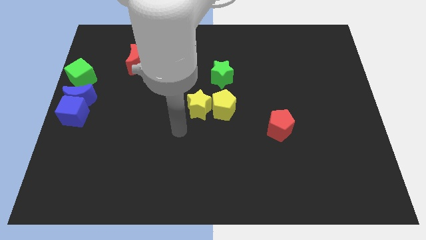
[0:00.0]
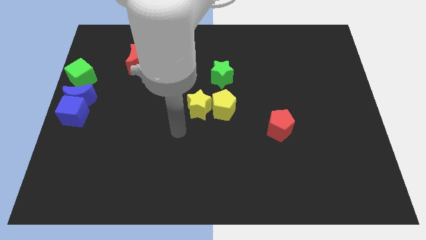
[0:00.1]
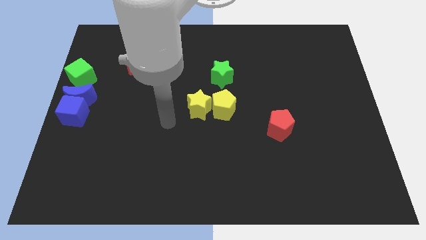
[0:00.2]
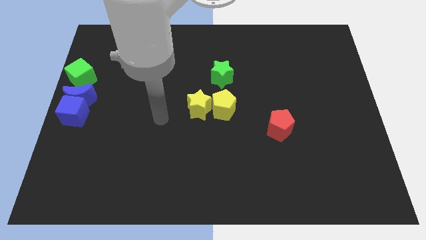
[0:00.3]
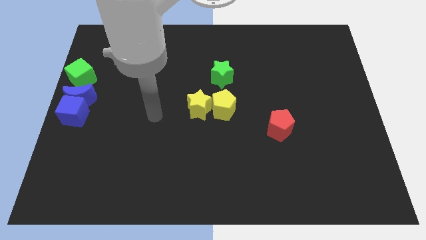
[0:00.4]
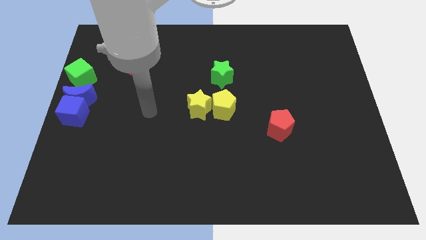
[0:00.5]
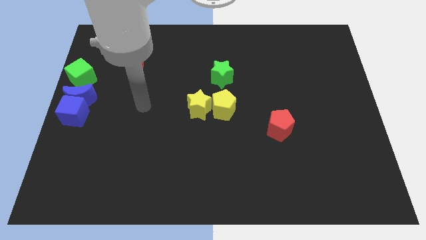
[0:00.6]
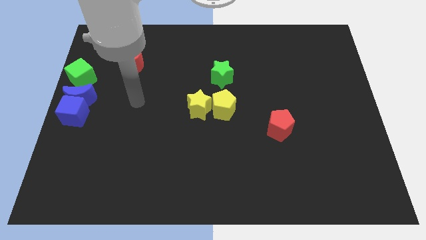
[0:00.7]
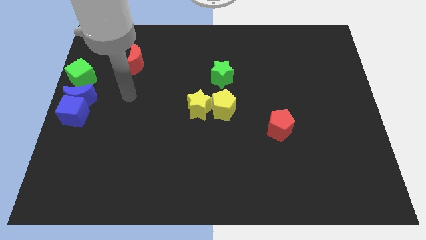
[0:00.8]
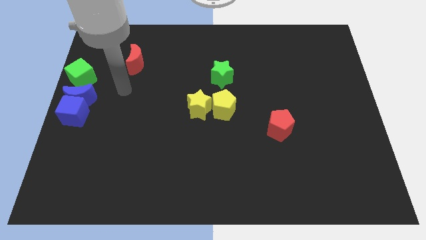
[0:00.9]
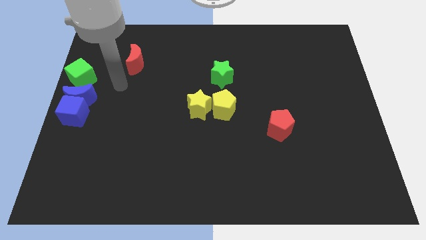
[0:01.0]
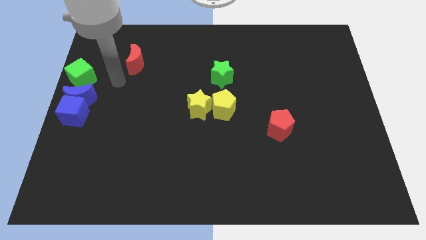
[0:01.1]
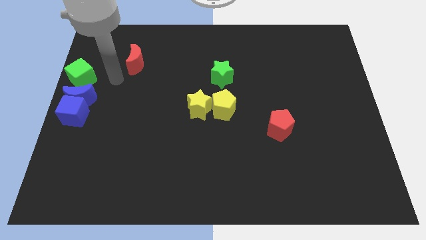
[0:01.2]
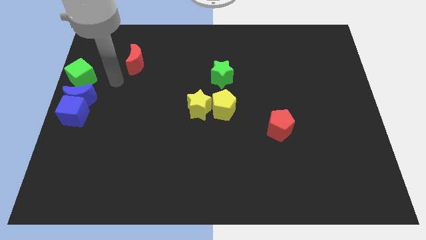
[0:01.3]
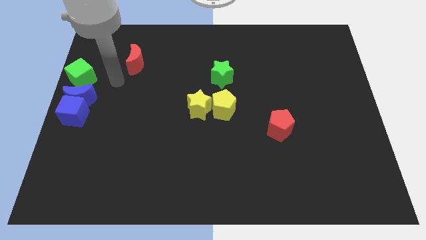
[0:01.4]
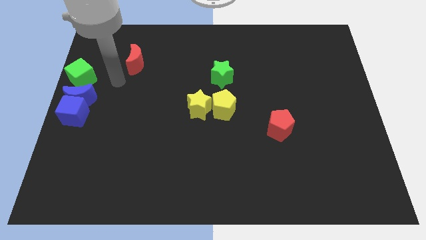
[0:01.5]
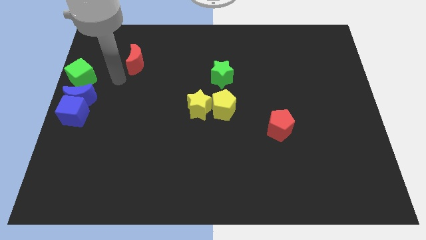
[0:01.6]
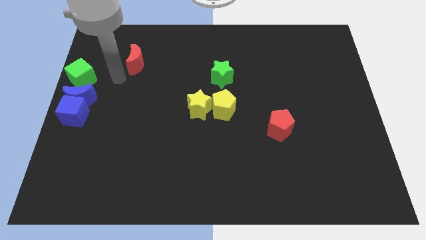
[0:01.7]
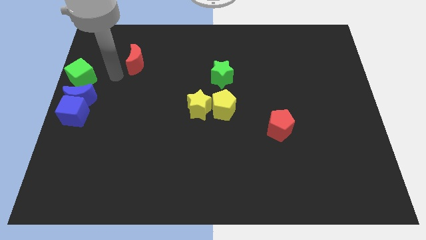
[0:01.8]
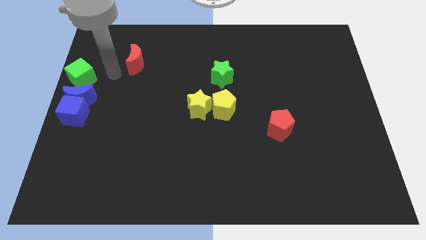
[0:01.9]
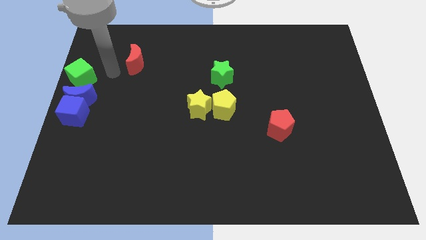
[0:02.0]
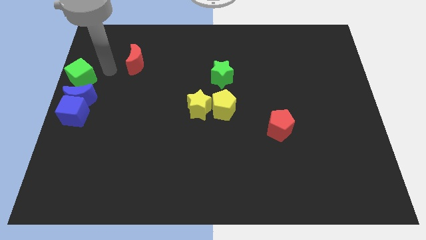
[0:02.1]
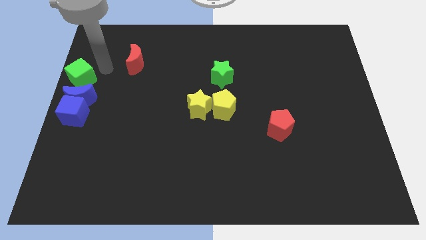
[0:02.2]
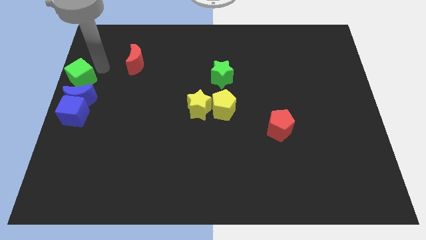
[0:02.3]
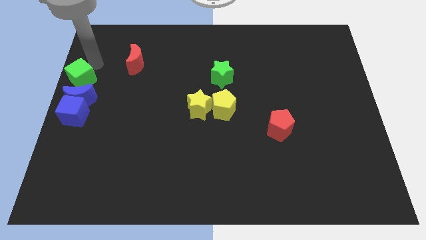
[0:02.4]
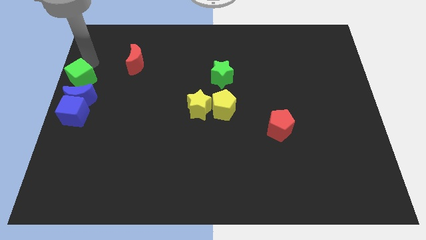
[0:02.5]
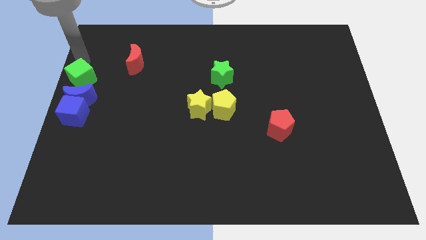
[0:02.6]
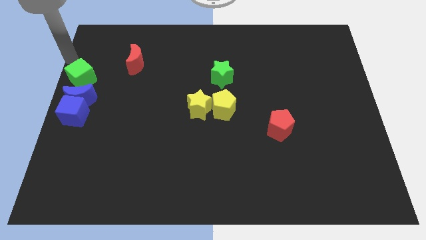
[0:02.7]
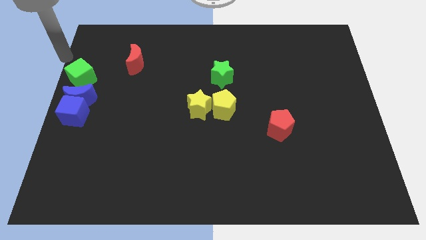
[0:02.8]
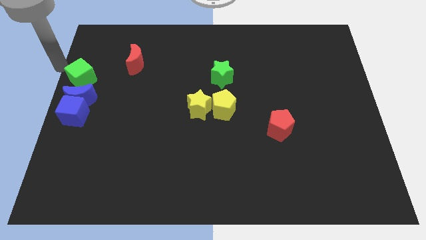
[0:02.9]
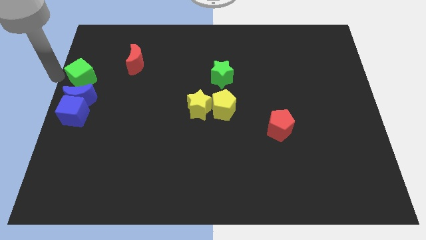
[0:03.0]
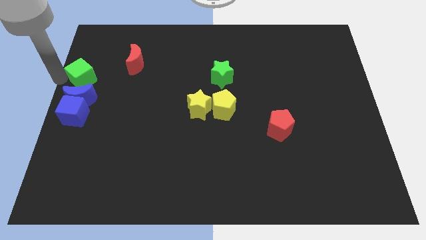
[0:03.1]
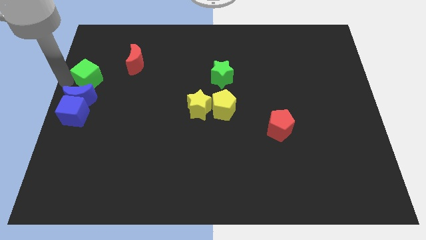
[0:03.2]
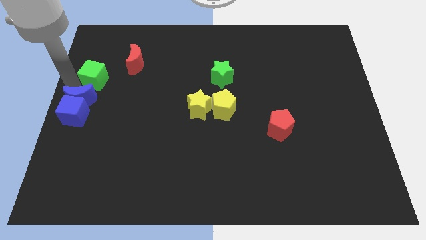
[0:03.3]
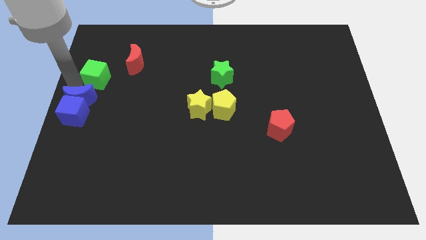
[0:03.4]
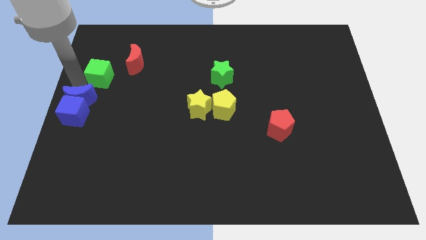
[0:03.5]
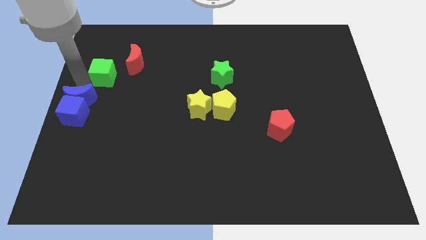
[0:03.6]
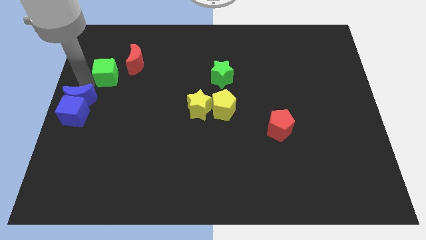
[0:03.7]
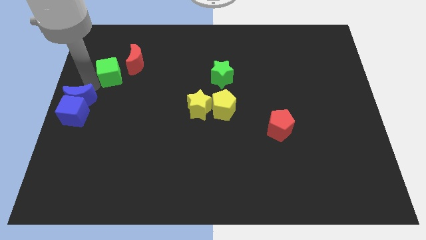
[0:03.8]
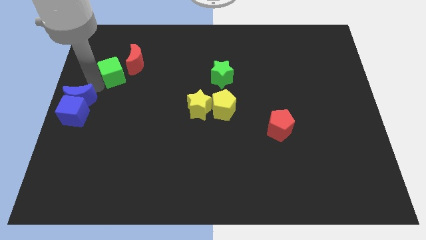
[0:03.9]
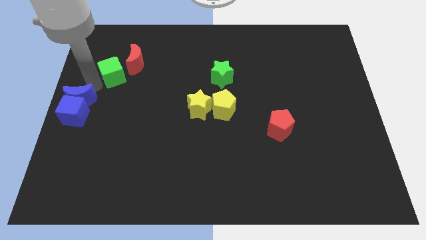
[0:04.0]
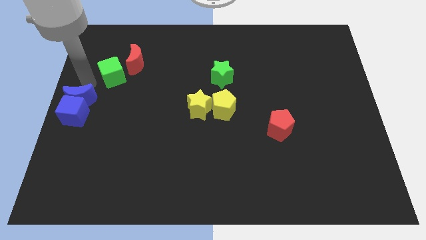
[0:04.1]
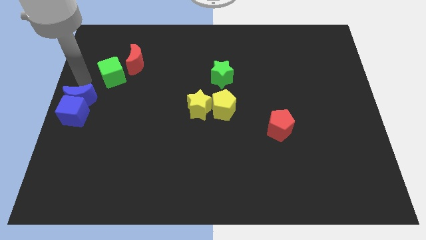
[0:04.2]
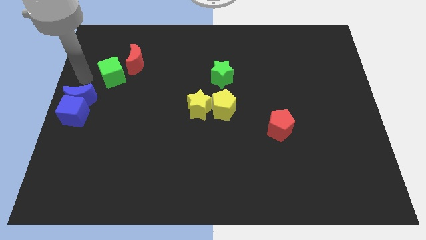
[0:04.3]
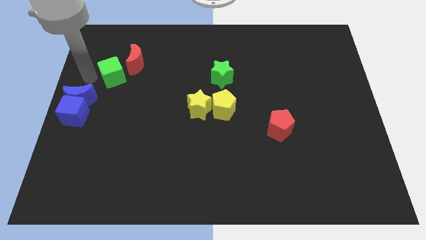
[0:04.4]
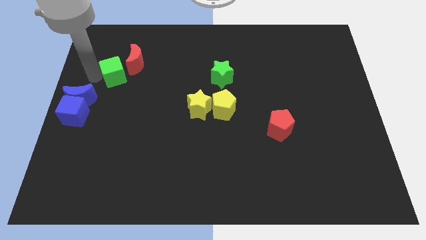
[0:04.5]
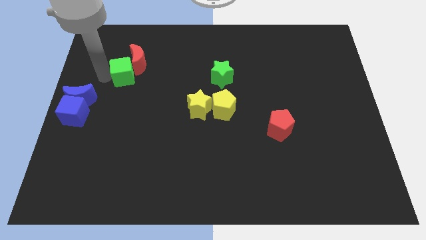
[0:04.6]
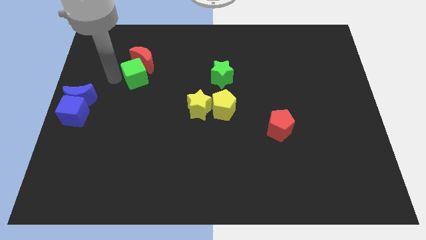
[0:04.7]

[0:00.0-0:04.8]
move the green cube to the bottom of the red crescent

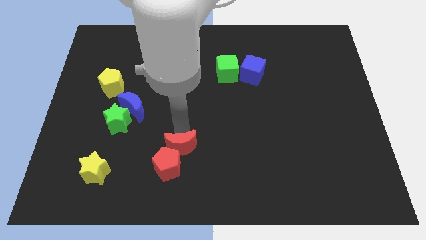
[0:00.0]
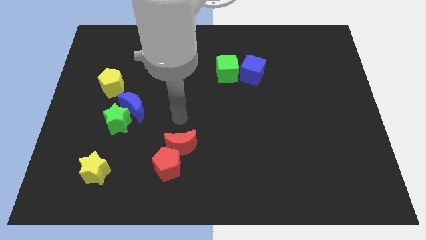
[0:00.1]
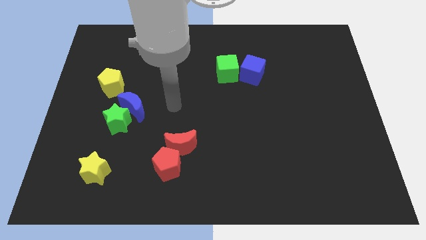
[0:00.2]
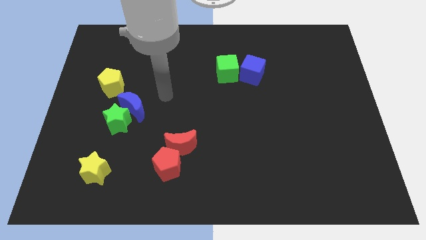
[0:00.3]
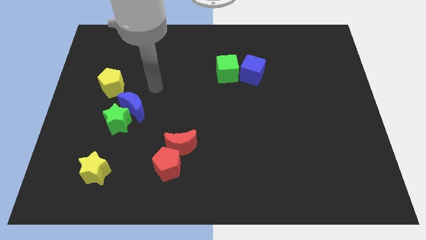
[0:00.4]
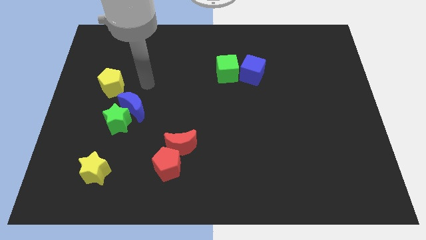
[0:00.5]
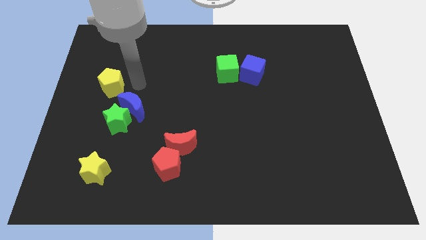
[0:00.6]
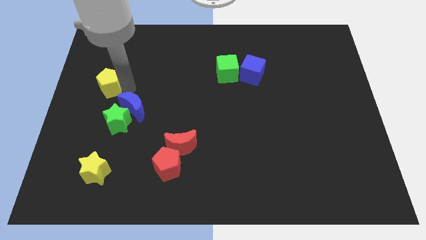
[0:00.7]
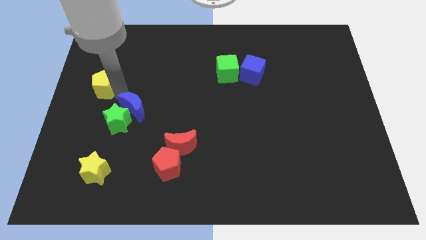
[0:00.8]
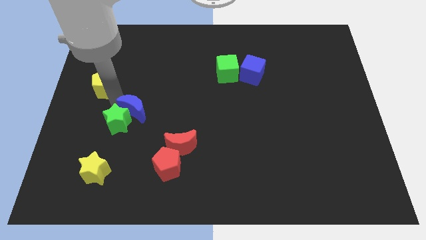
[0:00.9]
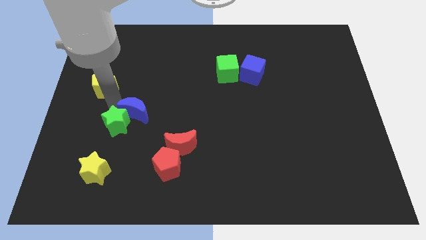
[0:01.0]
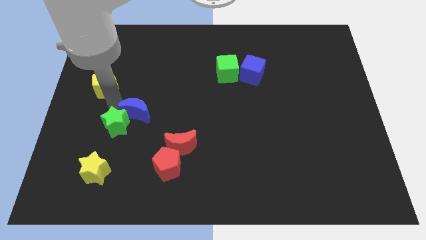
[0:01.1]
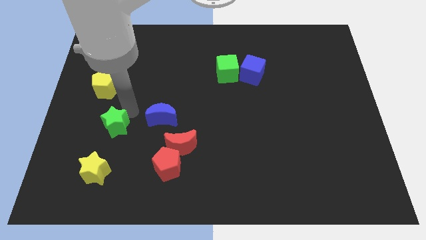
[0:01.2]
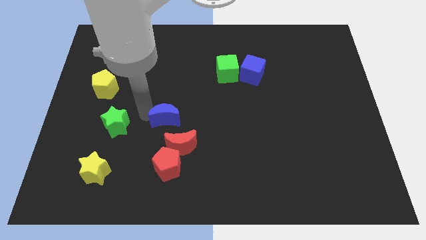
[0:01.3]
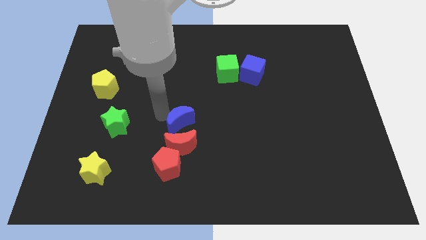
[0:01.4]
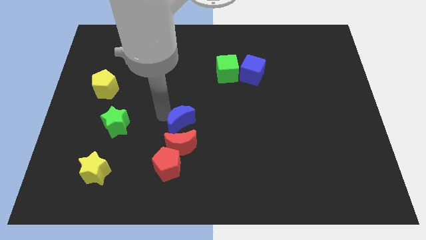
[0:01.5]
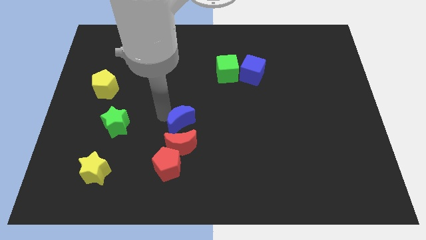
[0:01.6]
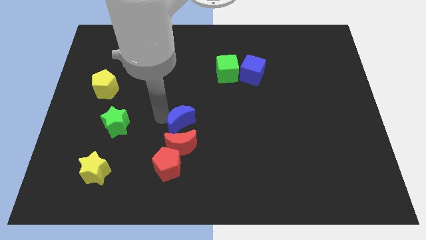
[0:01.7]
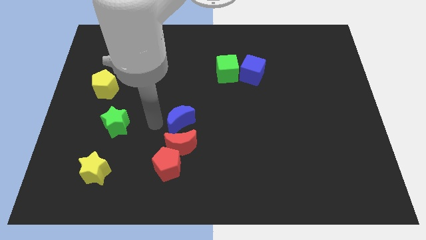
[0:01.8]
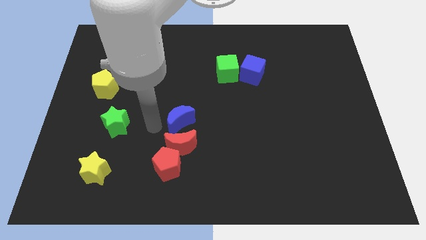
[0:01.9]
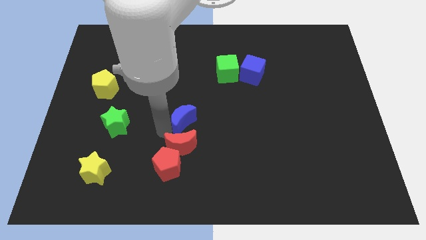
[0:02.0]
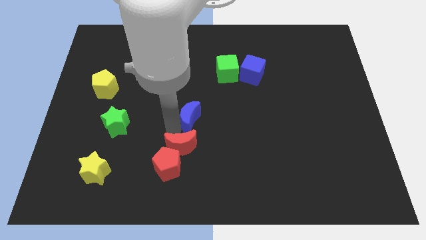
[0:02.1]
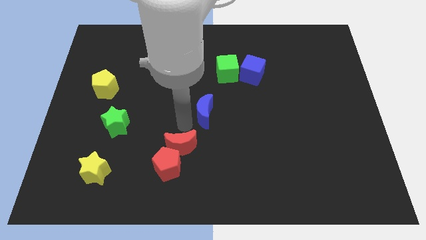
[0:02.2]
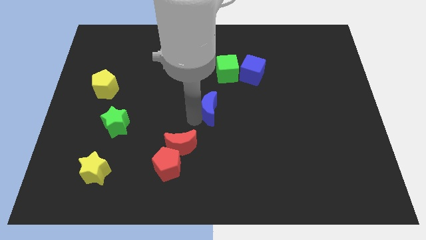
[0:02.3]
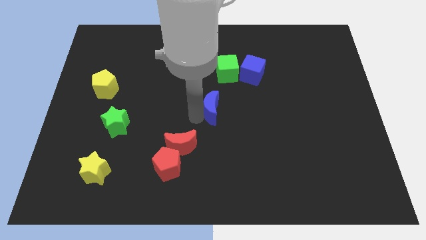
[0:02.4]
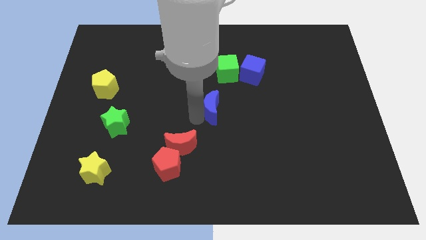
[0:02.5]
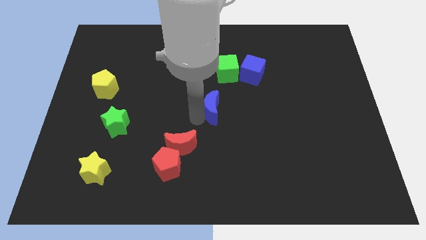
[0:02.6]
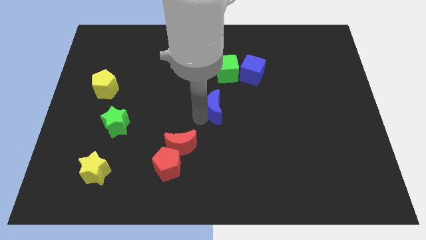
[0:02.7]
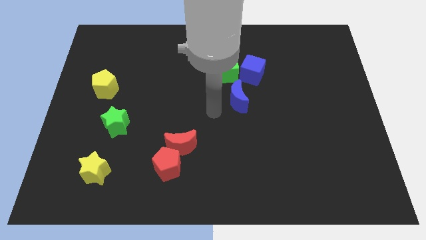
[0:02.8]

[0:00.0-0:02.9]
place the blue moon down to the green cube

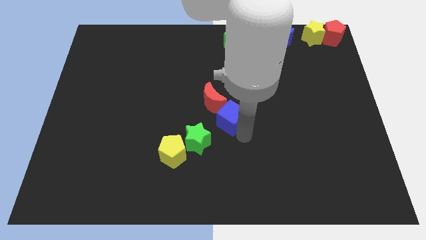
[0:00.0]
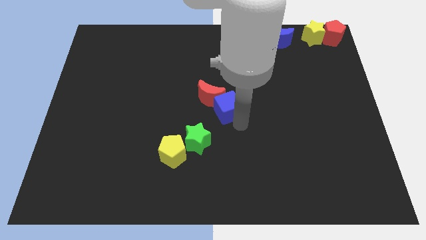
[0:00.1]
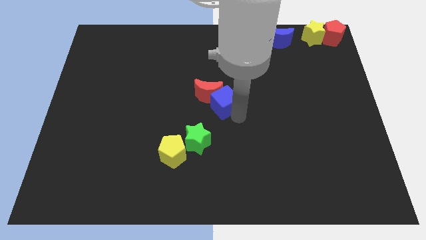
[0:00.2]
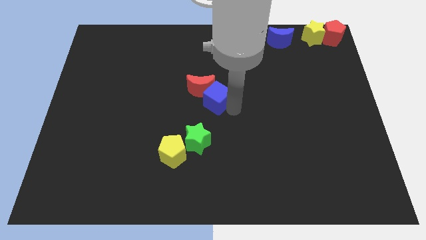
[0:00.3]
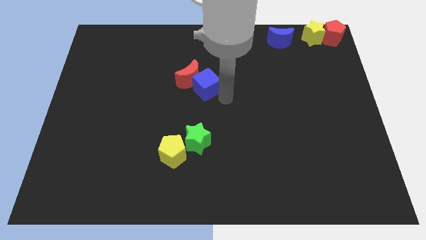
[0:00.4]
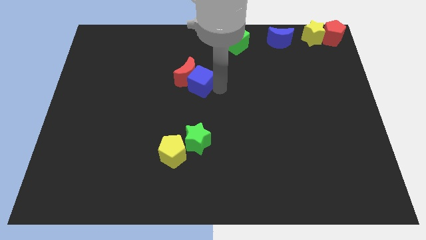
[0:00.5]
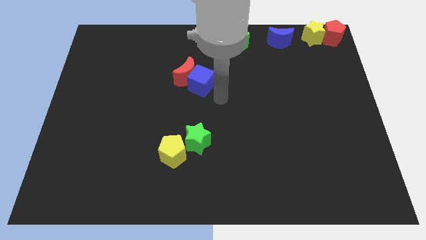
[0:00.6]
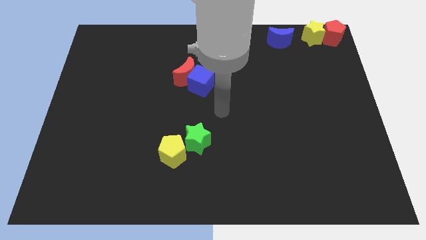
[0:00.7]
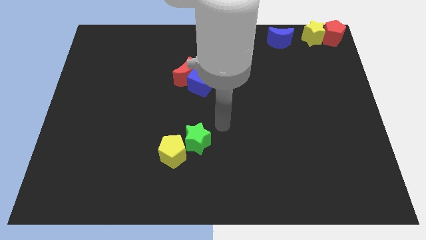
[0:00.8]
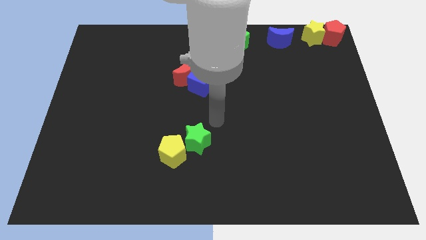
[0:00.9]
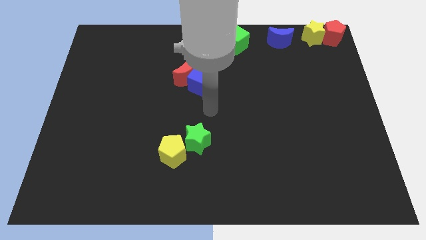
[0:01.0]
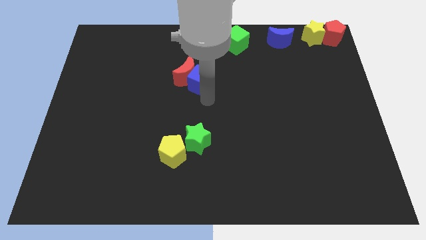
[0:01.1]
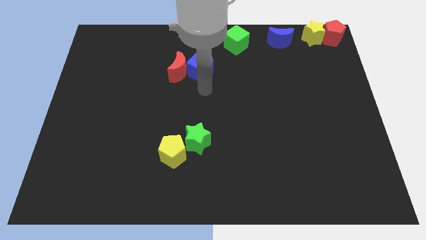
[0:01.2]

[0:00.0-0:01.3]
move the blue cube vertically above the green star
